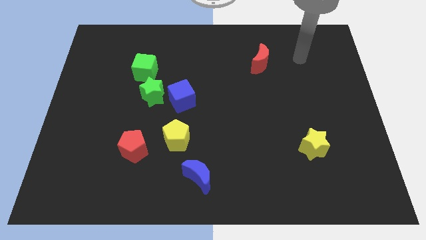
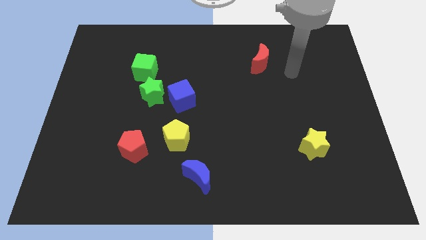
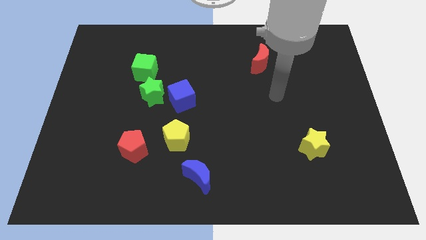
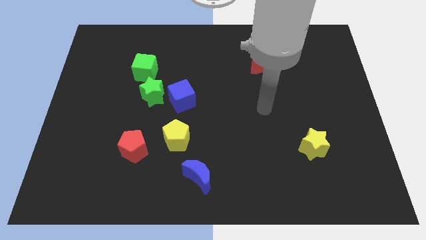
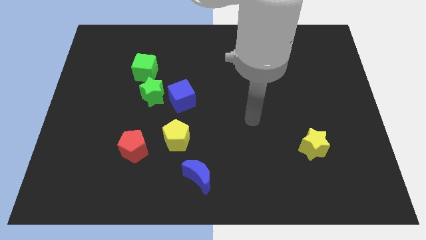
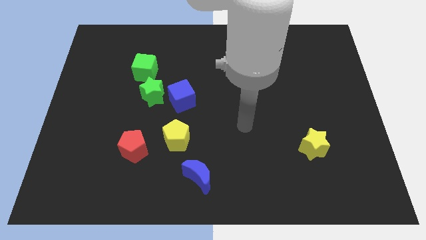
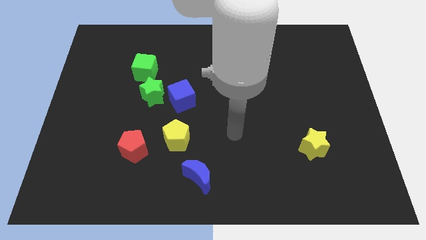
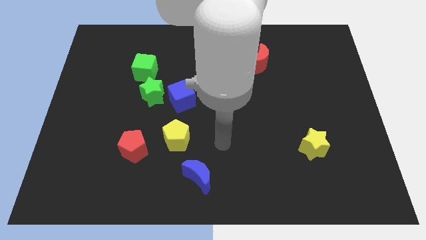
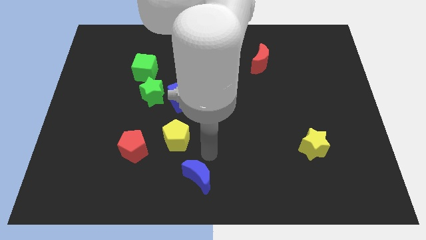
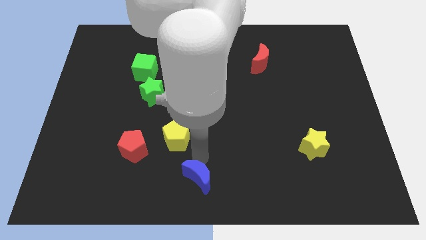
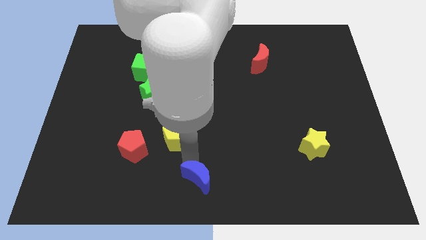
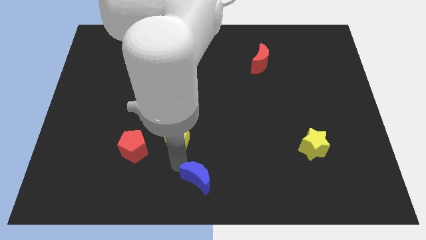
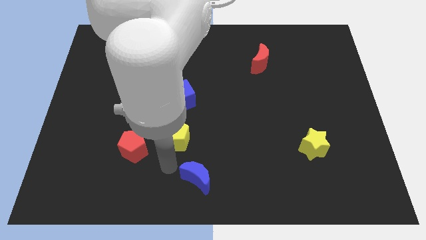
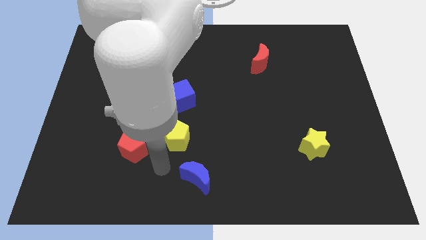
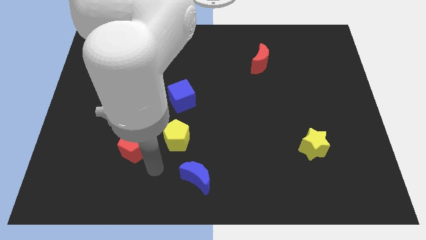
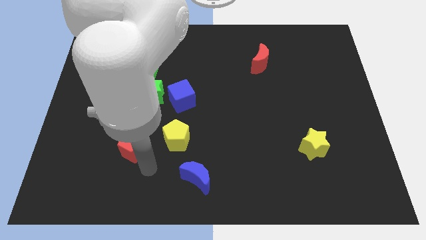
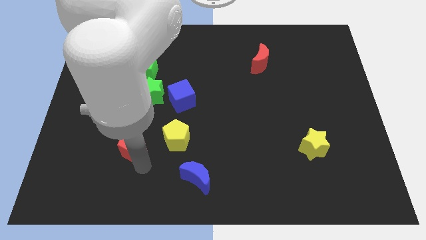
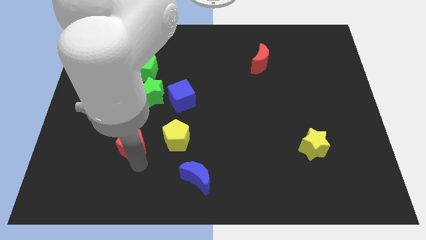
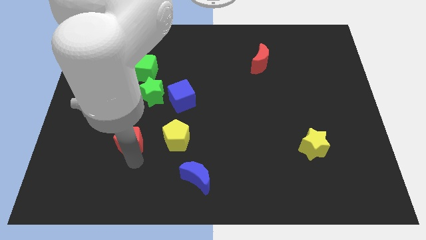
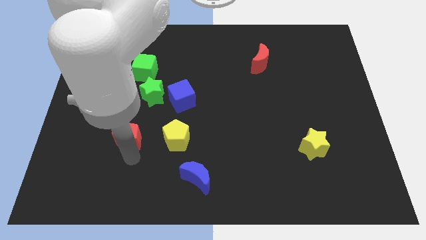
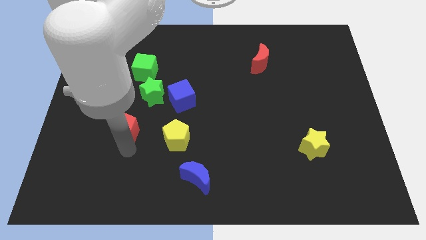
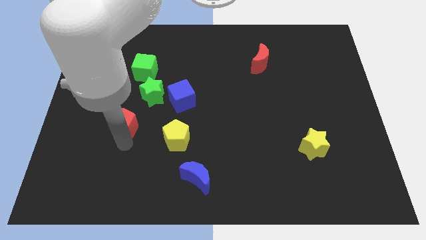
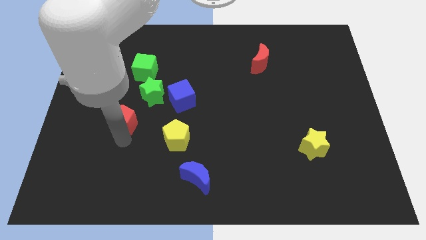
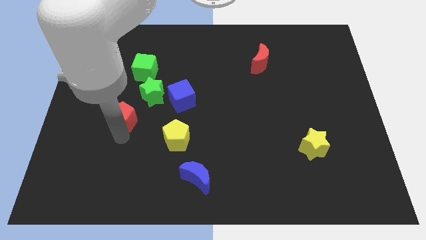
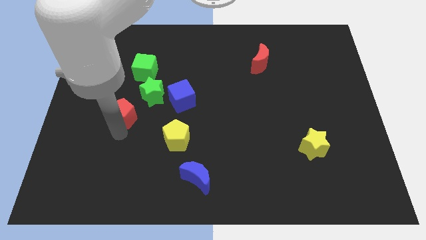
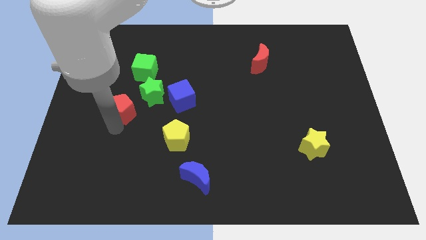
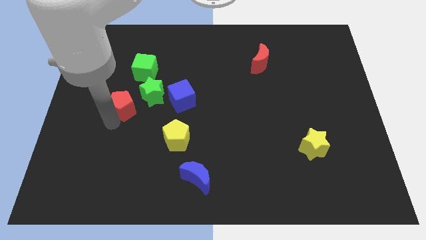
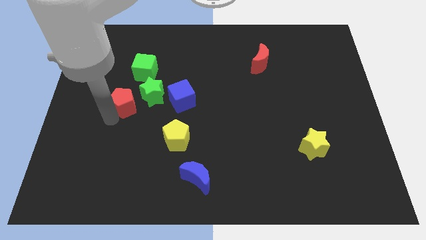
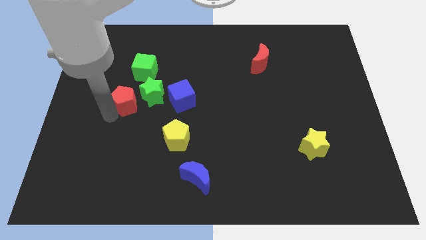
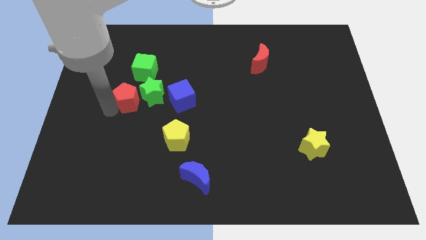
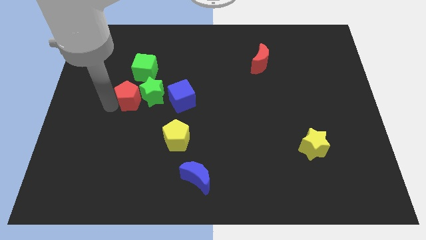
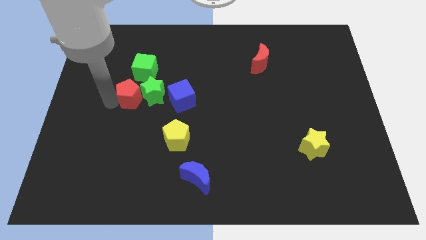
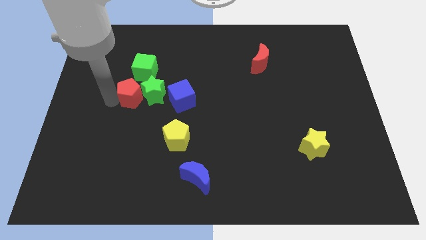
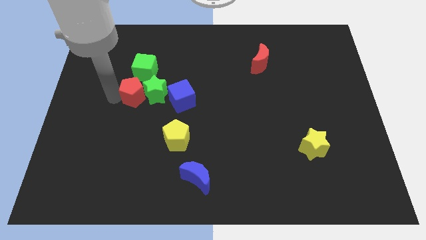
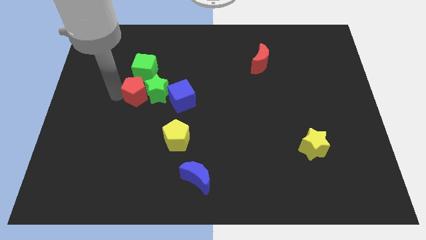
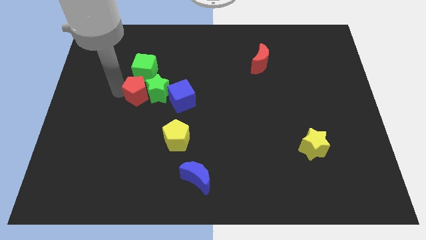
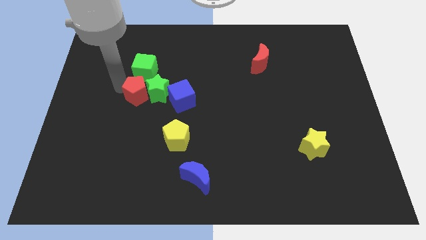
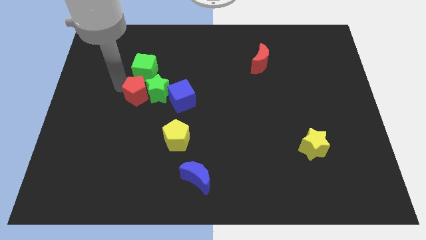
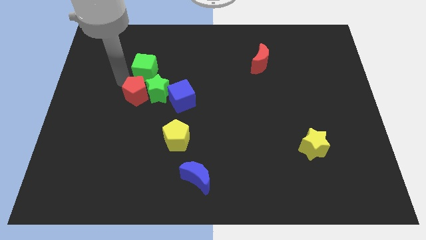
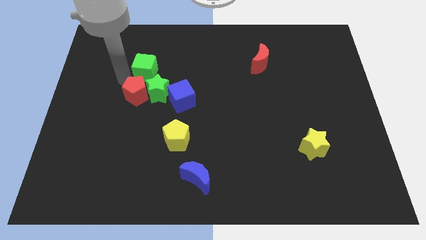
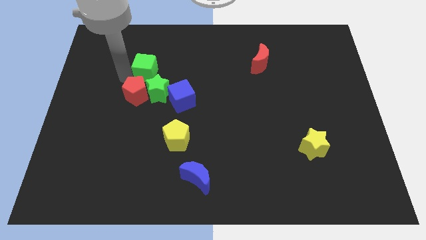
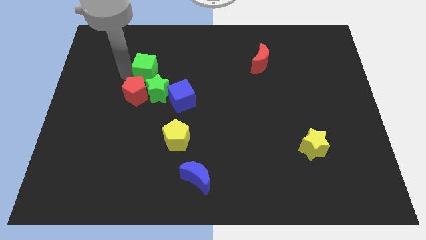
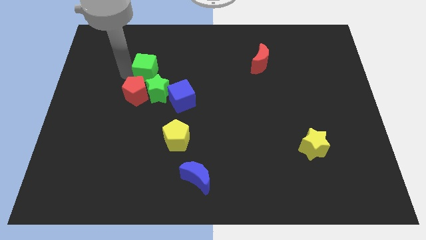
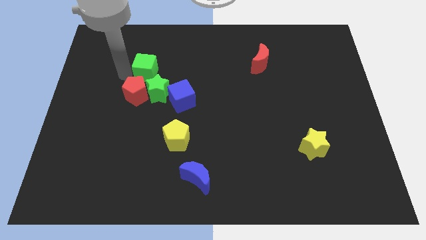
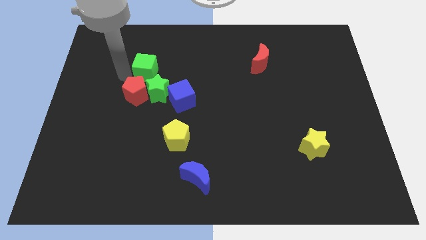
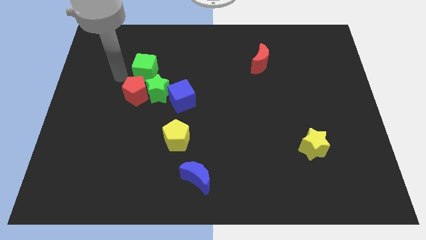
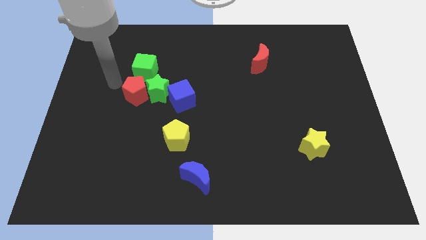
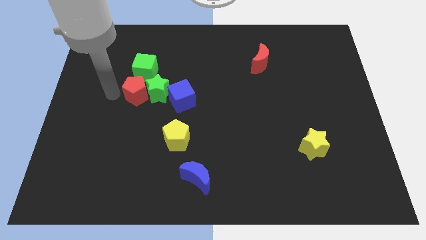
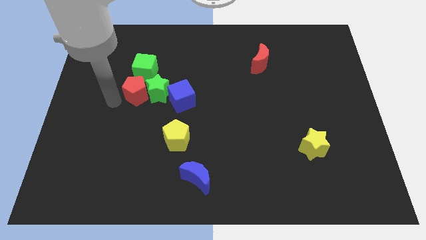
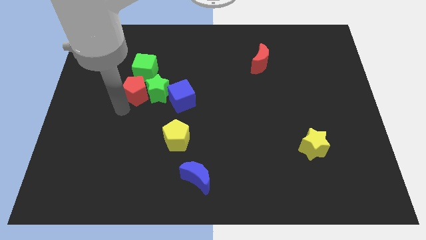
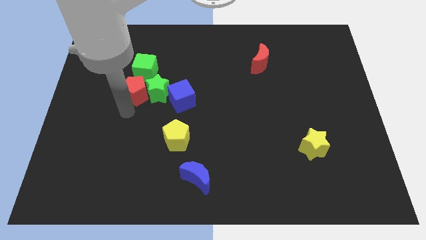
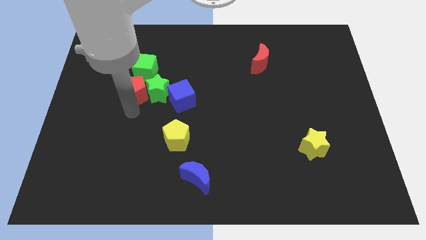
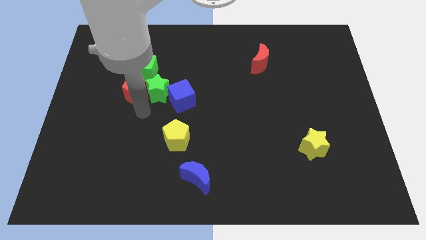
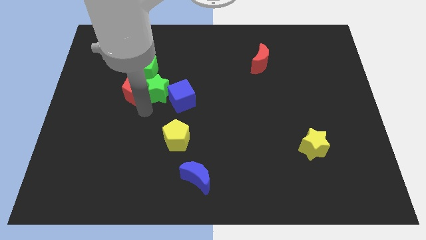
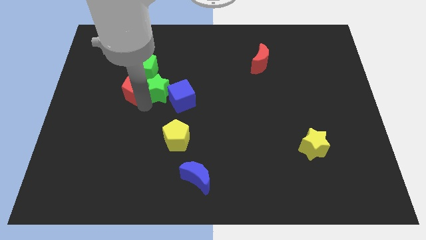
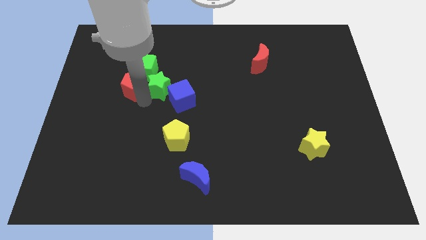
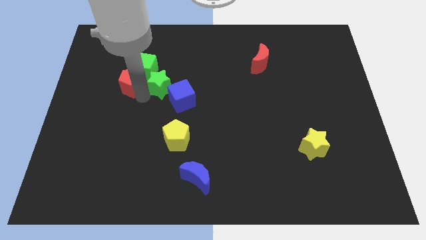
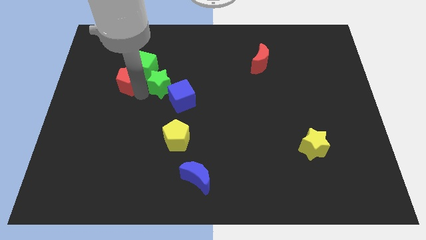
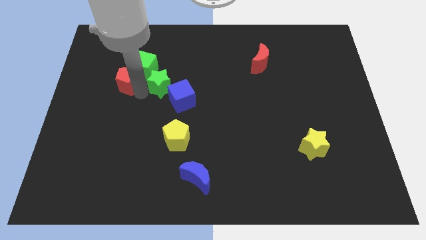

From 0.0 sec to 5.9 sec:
push the red pentagon next to the green cube

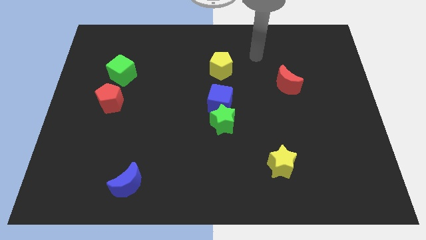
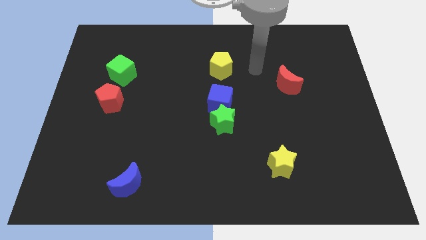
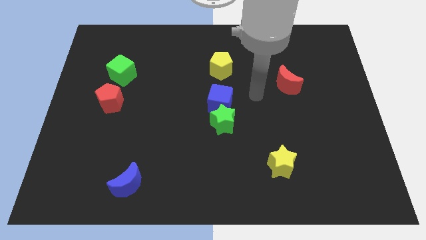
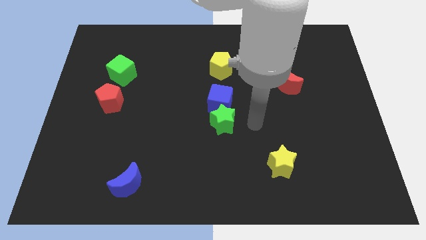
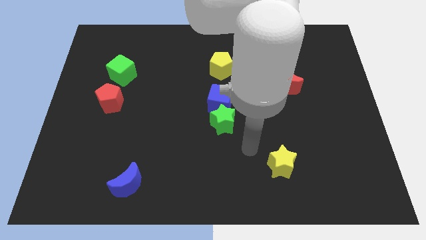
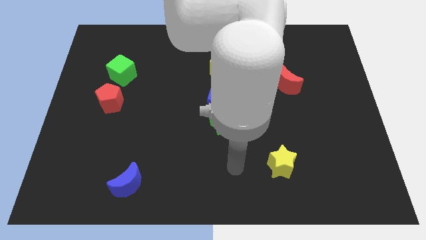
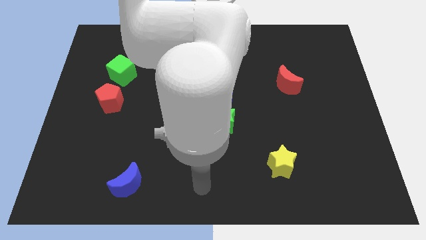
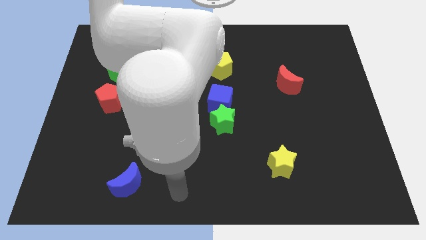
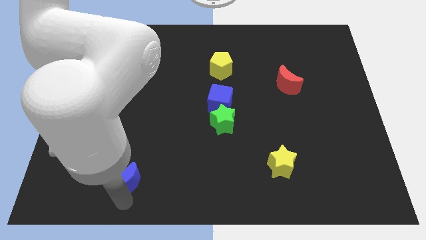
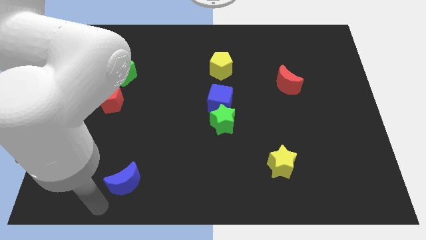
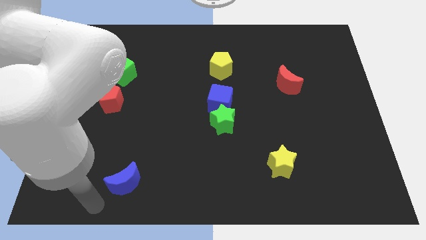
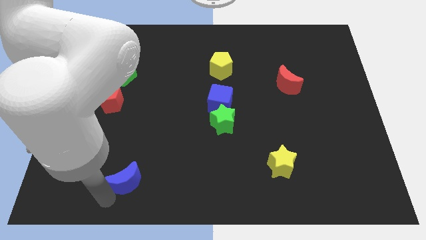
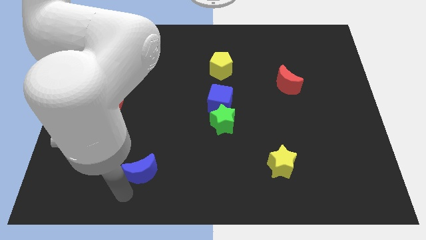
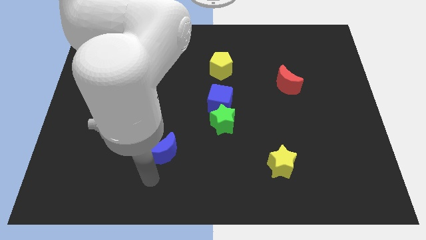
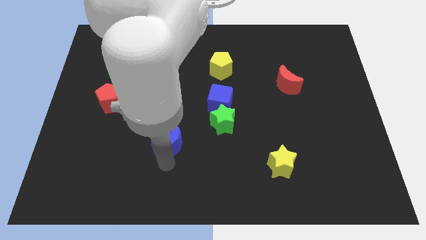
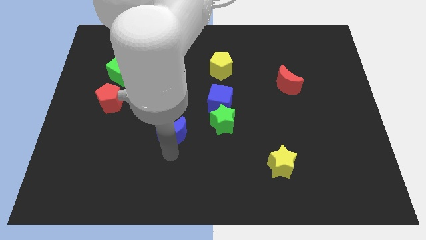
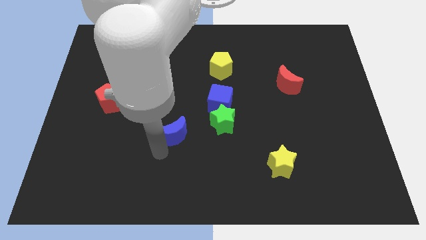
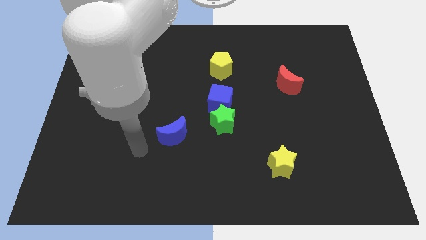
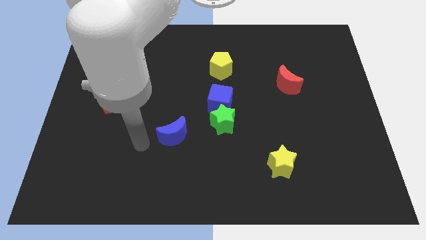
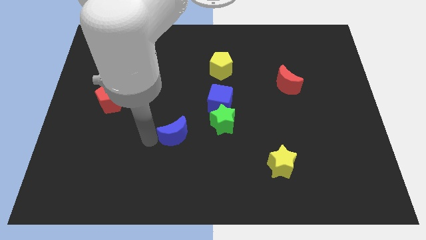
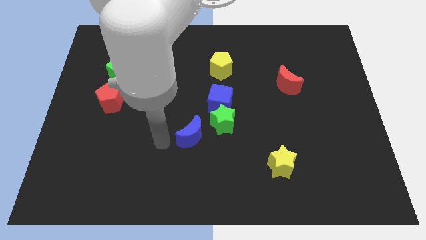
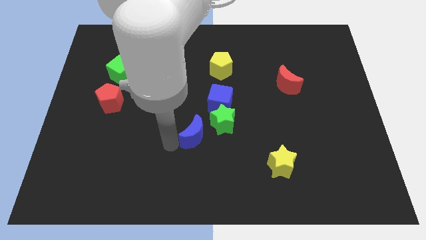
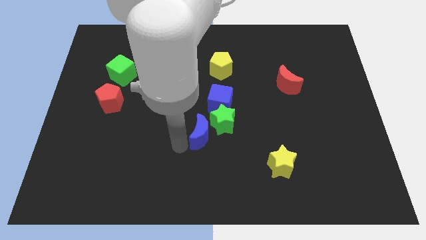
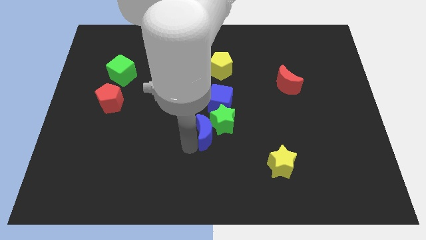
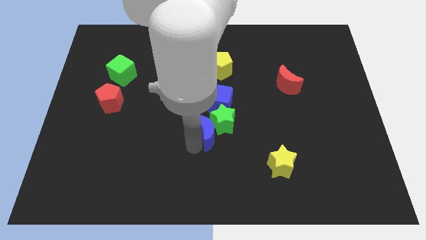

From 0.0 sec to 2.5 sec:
put the blue moon close to the green star

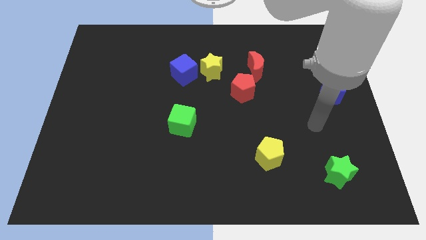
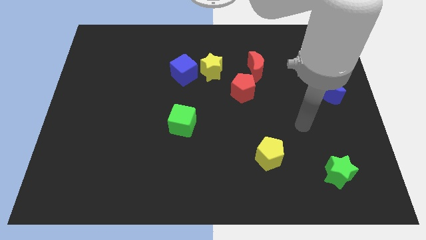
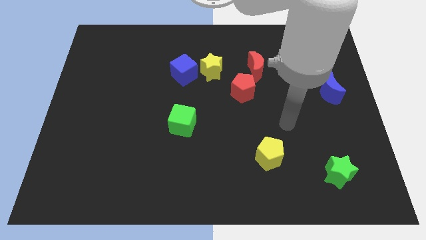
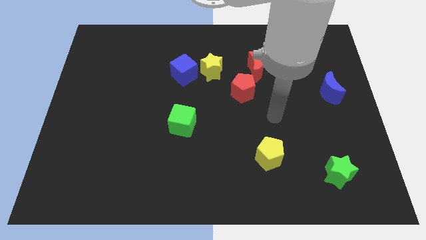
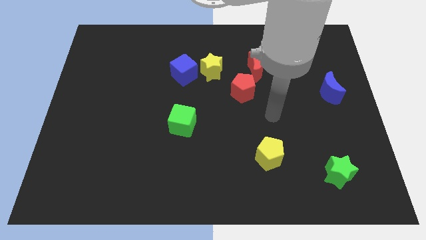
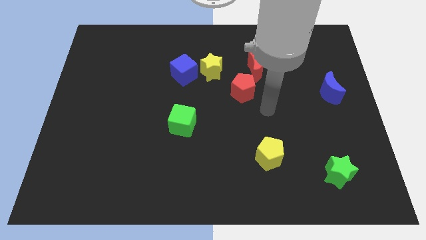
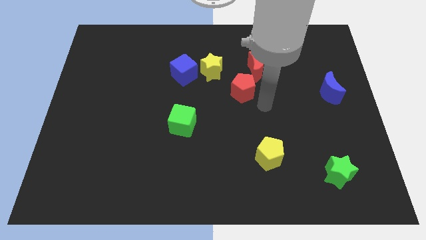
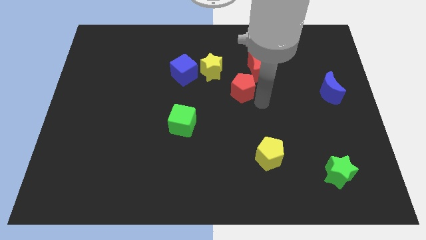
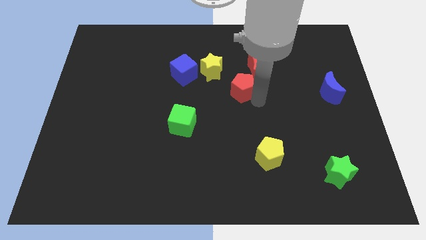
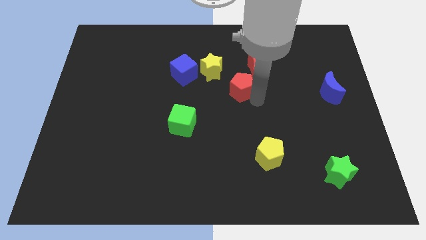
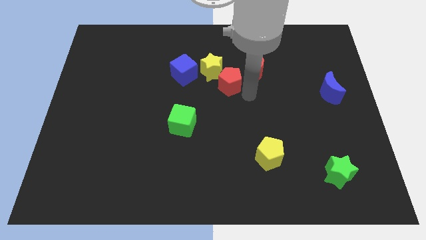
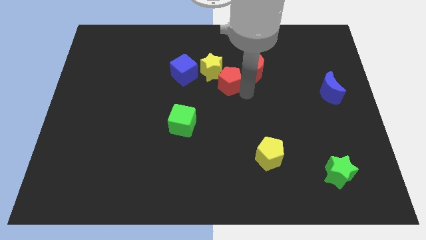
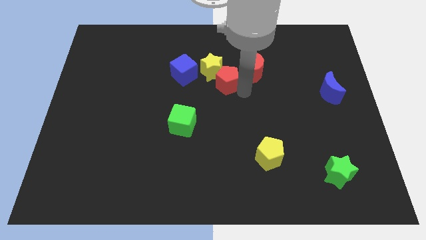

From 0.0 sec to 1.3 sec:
put the red pentagon to the yellow star
